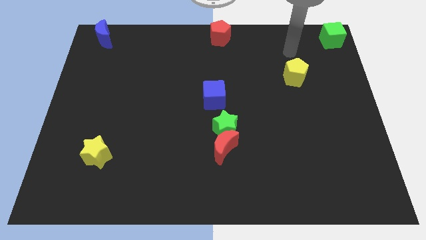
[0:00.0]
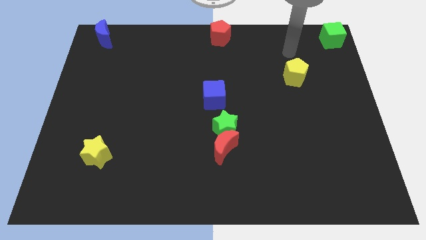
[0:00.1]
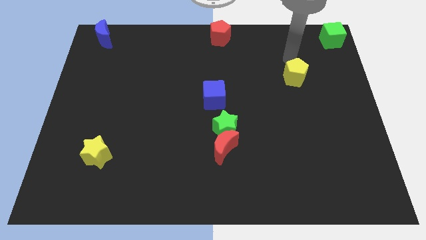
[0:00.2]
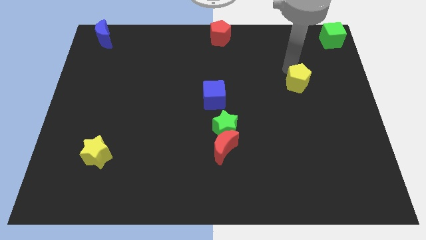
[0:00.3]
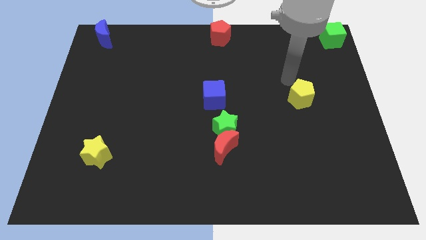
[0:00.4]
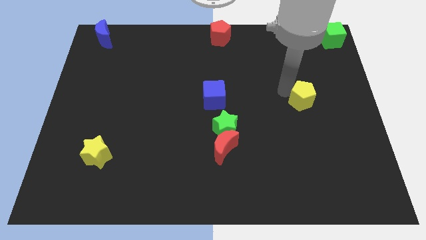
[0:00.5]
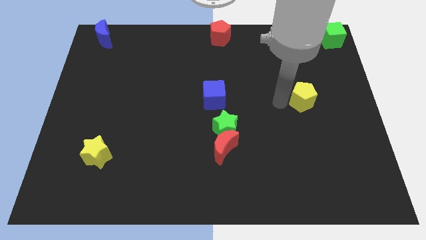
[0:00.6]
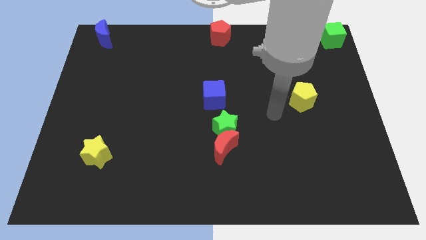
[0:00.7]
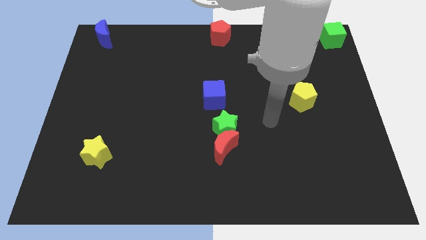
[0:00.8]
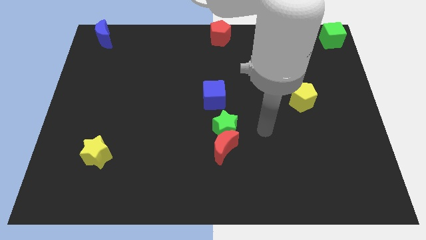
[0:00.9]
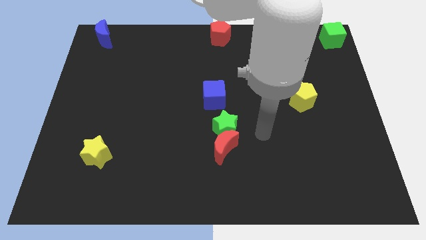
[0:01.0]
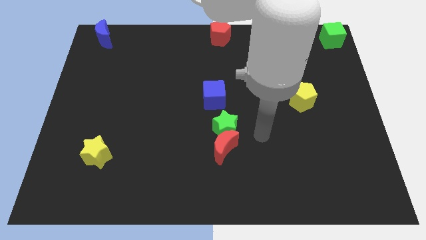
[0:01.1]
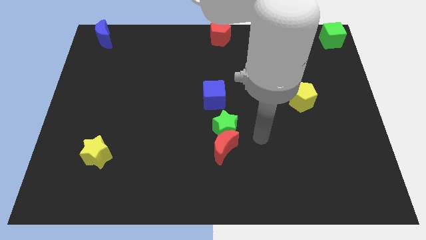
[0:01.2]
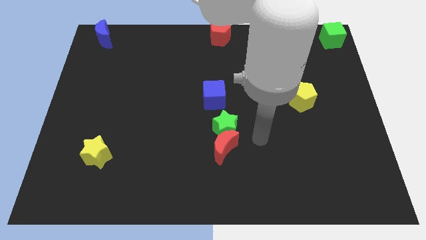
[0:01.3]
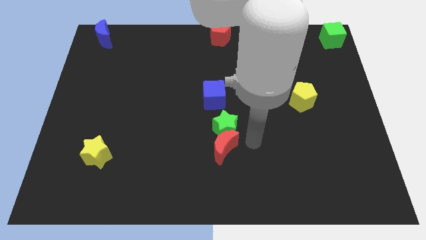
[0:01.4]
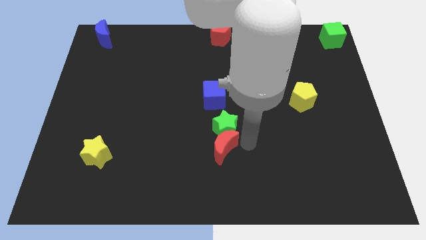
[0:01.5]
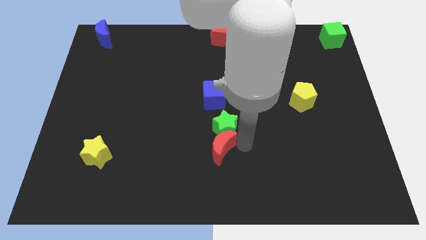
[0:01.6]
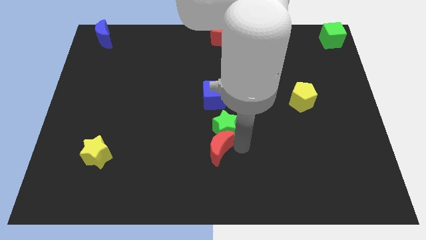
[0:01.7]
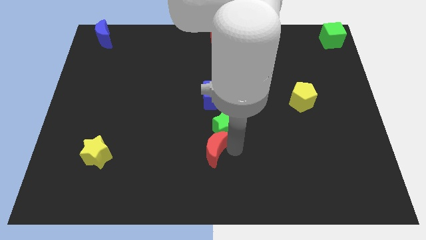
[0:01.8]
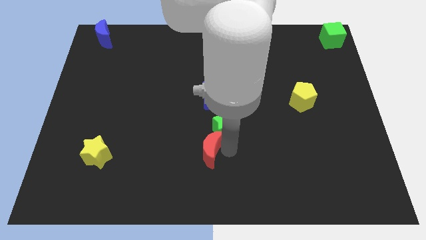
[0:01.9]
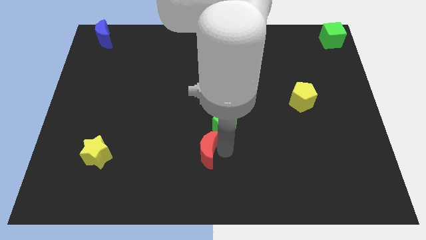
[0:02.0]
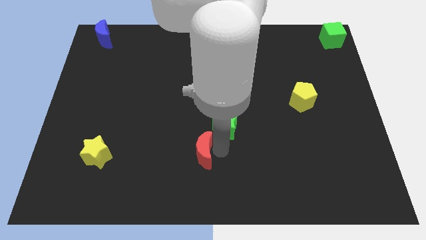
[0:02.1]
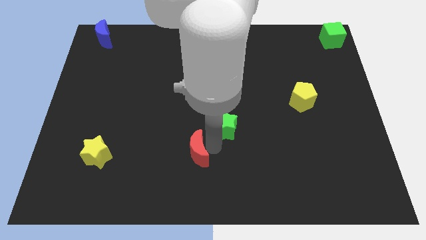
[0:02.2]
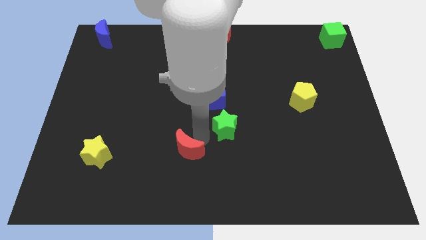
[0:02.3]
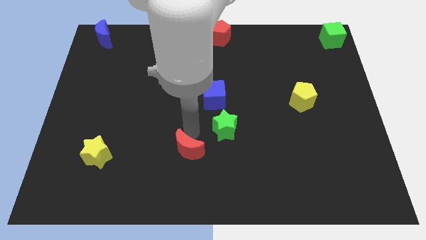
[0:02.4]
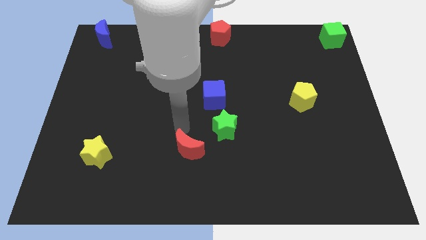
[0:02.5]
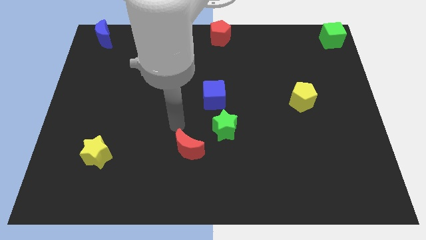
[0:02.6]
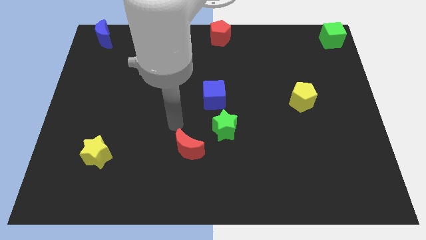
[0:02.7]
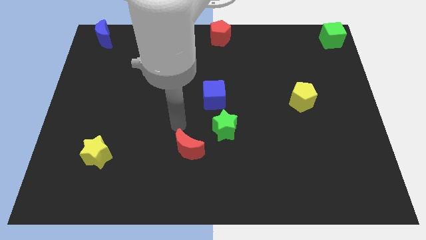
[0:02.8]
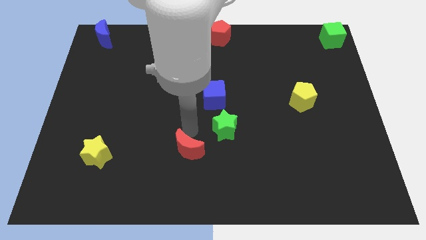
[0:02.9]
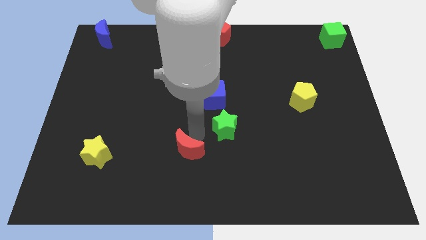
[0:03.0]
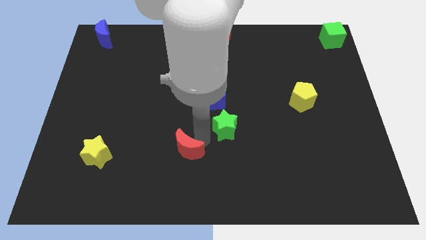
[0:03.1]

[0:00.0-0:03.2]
separate the red moon and green star

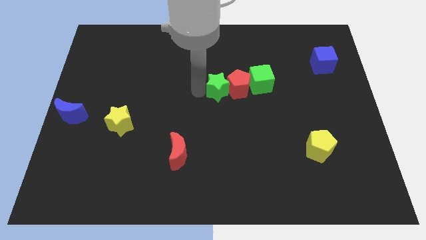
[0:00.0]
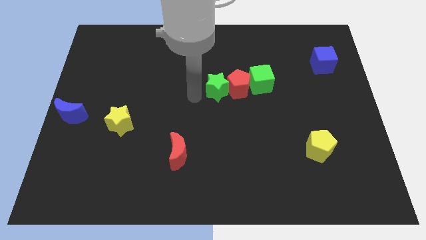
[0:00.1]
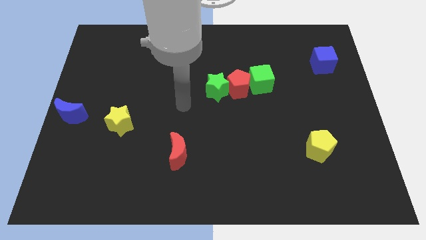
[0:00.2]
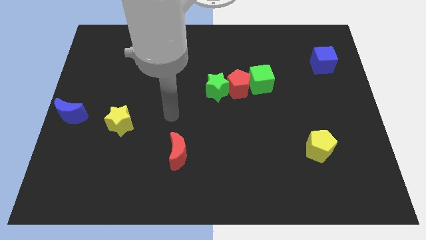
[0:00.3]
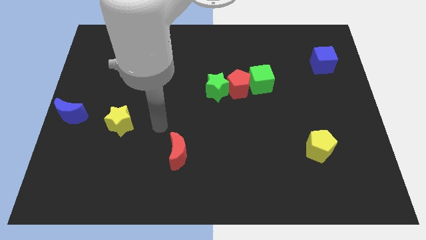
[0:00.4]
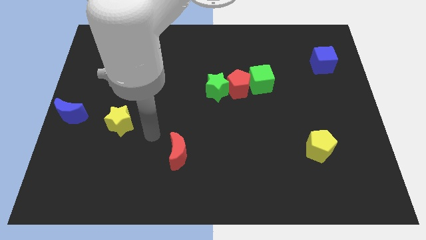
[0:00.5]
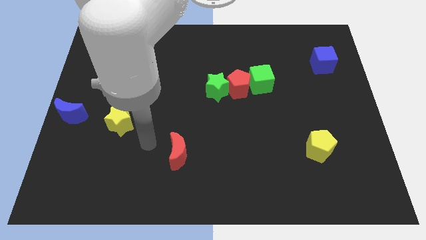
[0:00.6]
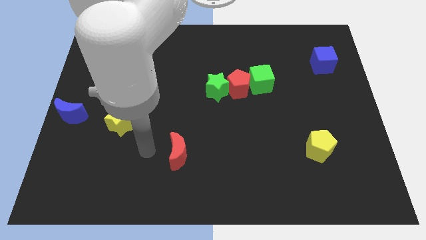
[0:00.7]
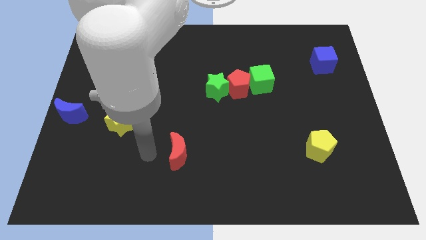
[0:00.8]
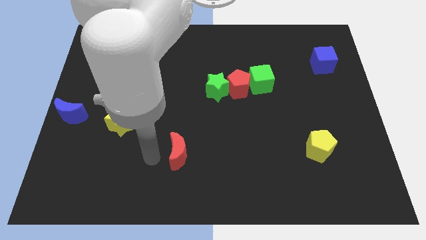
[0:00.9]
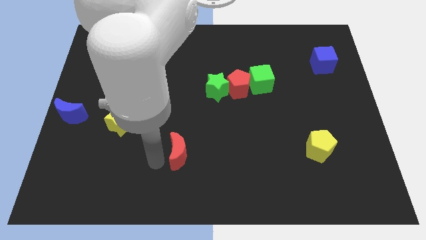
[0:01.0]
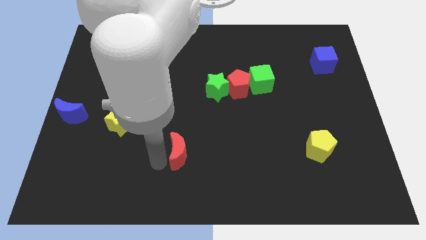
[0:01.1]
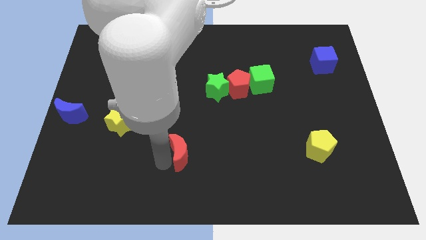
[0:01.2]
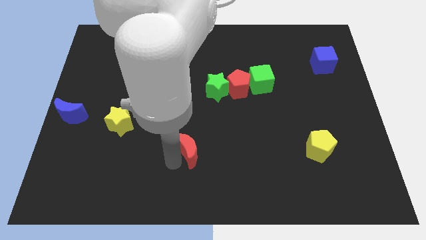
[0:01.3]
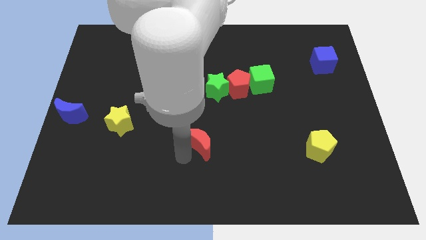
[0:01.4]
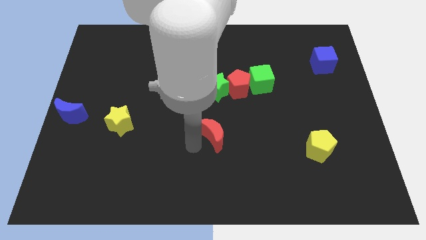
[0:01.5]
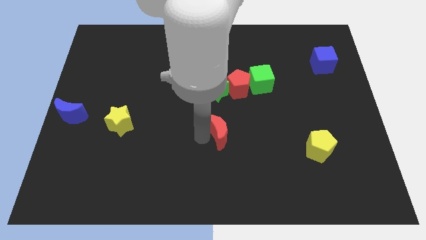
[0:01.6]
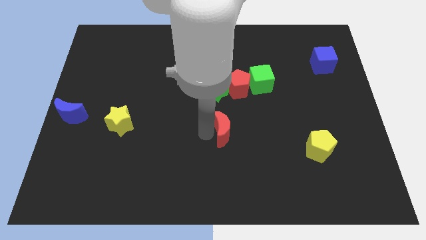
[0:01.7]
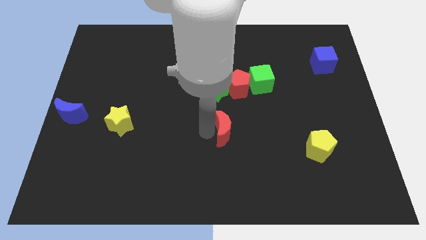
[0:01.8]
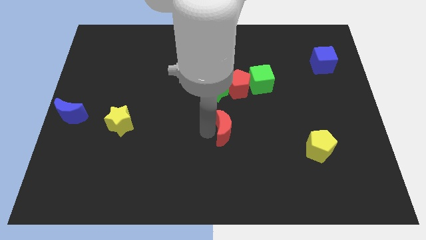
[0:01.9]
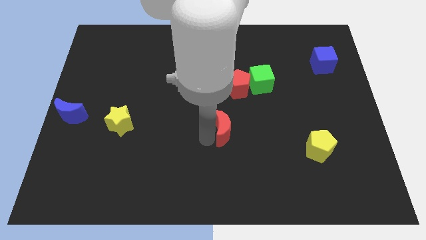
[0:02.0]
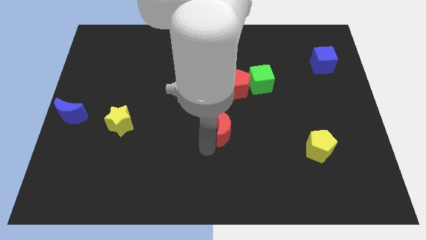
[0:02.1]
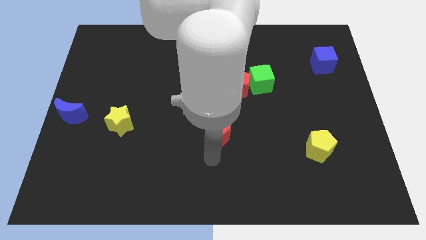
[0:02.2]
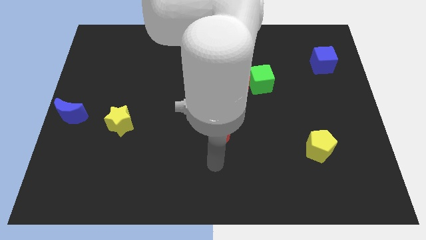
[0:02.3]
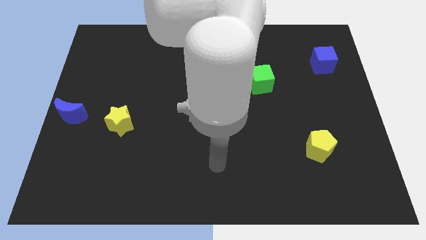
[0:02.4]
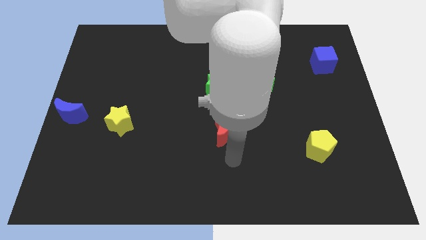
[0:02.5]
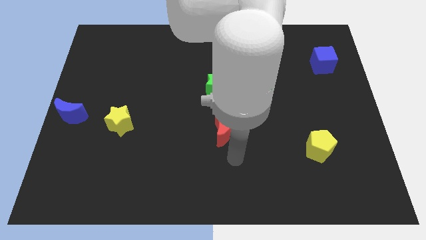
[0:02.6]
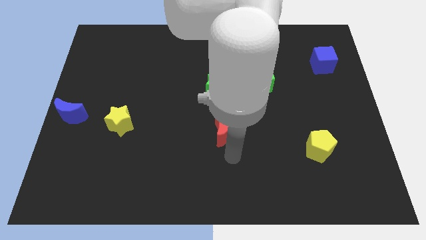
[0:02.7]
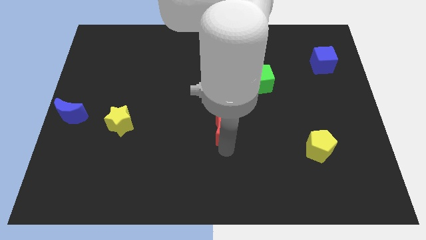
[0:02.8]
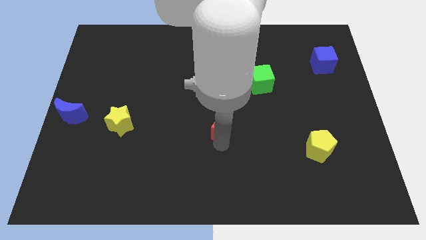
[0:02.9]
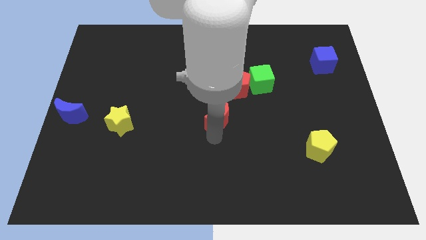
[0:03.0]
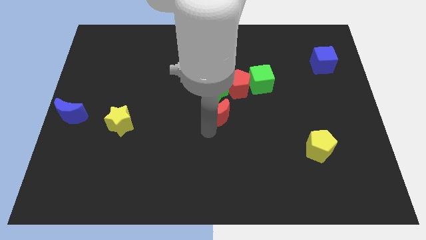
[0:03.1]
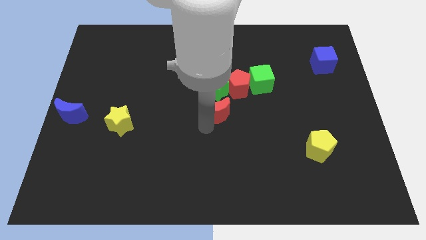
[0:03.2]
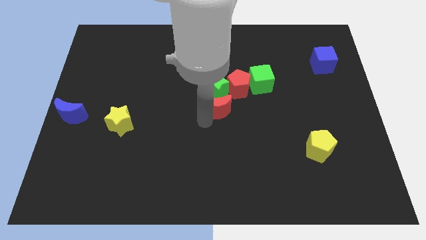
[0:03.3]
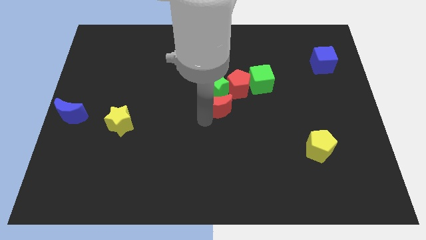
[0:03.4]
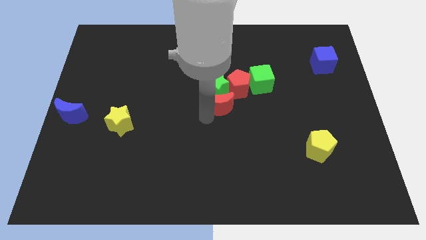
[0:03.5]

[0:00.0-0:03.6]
put the red moon vertically below the green star

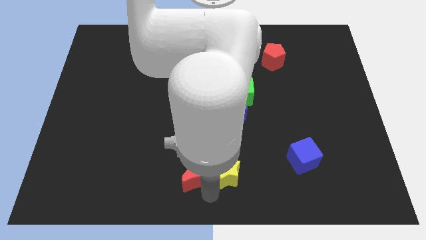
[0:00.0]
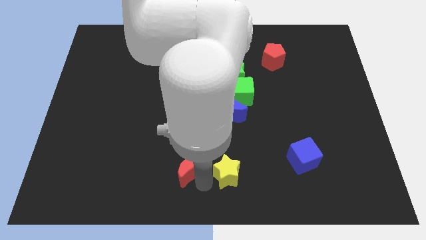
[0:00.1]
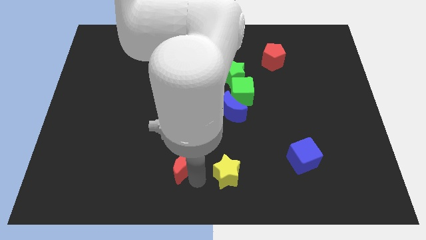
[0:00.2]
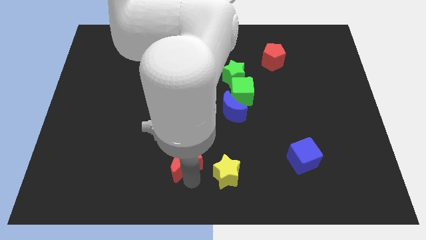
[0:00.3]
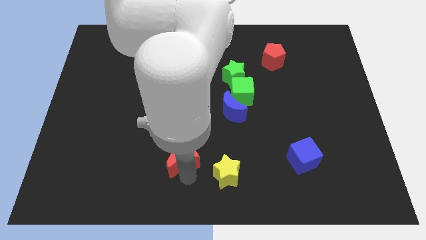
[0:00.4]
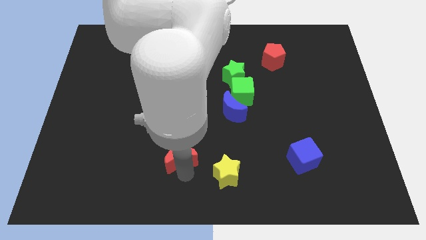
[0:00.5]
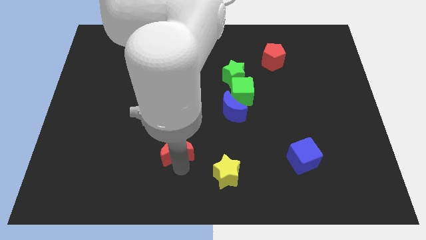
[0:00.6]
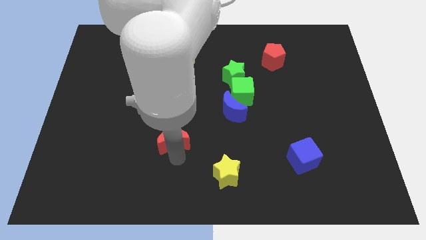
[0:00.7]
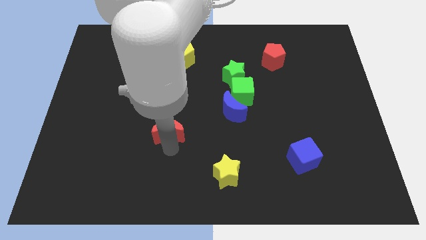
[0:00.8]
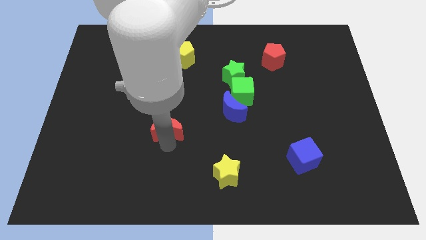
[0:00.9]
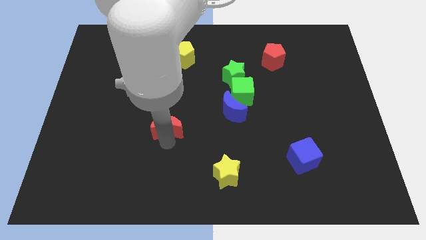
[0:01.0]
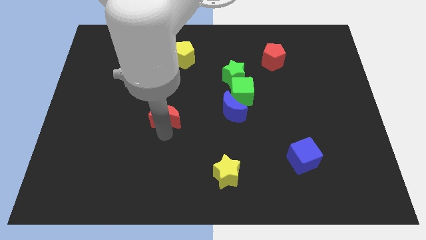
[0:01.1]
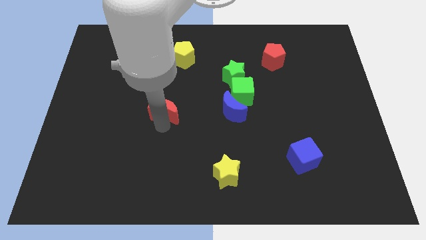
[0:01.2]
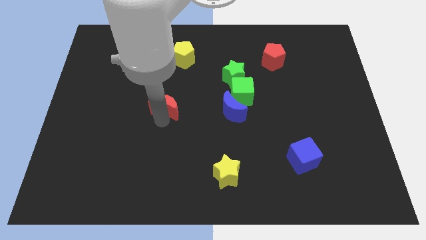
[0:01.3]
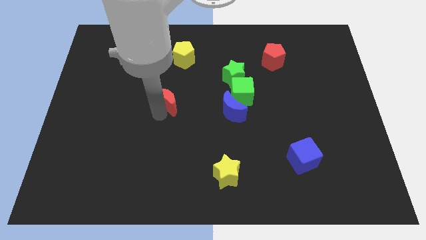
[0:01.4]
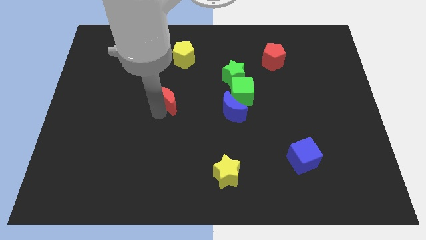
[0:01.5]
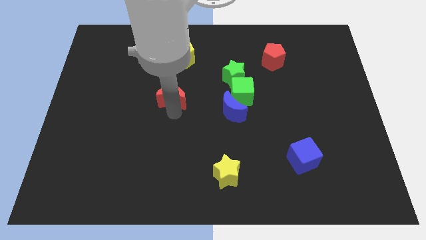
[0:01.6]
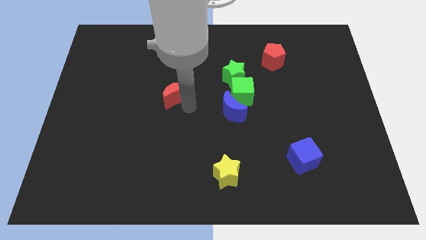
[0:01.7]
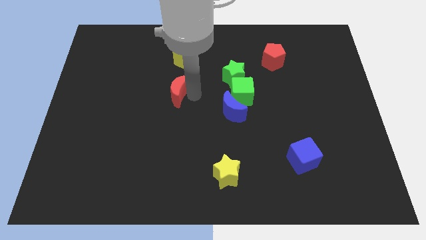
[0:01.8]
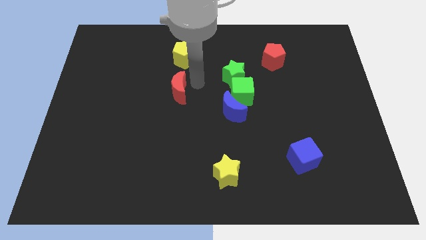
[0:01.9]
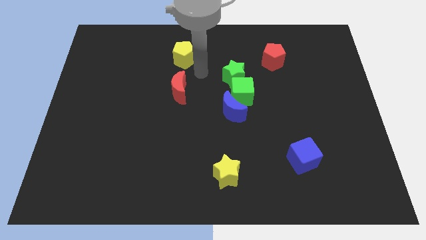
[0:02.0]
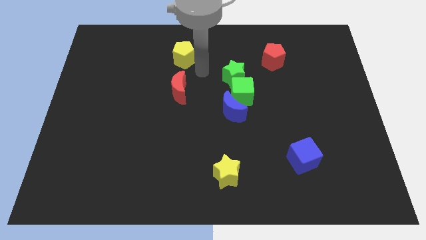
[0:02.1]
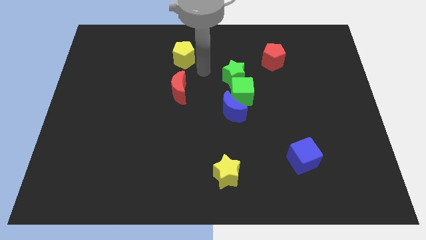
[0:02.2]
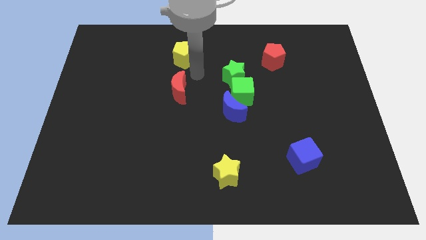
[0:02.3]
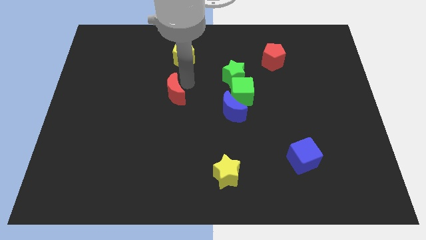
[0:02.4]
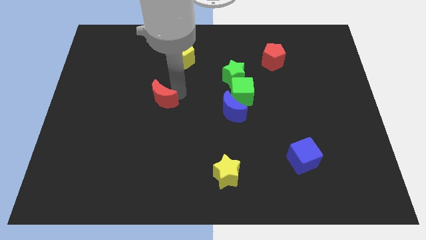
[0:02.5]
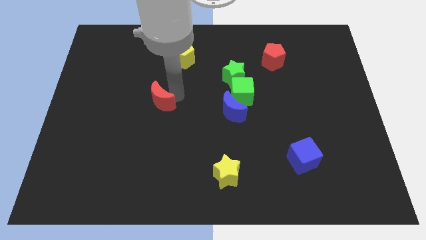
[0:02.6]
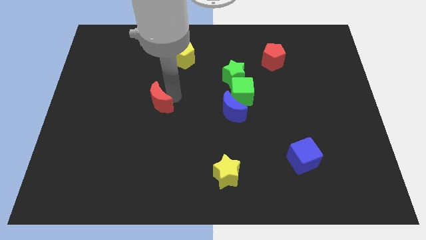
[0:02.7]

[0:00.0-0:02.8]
move the red crescent to the left of the green cube
